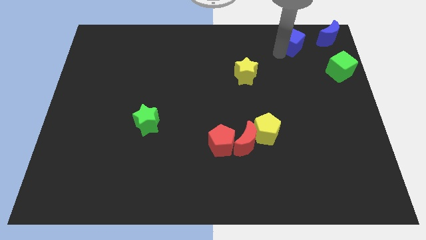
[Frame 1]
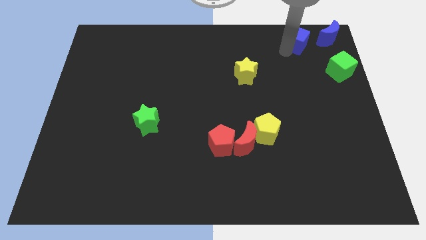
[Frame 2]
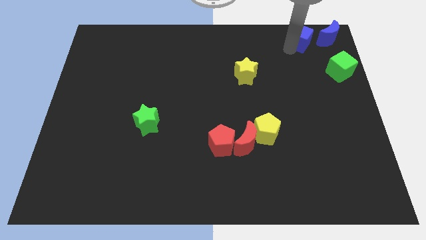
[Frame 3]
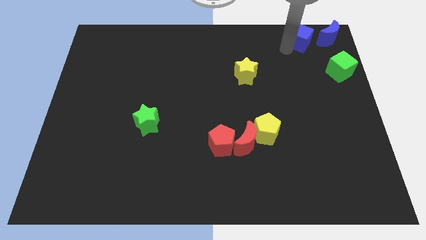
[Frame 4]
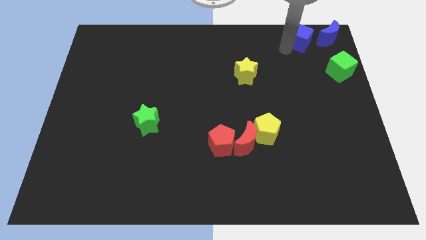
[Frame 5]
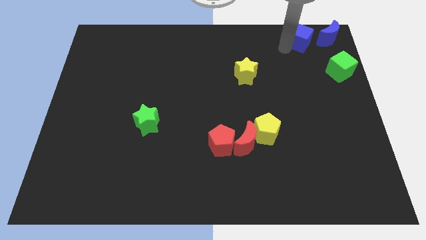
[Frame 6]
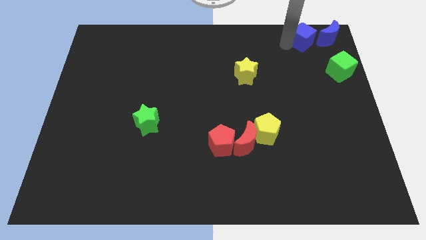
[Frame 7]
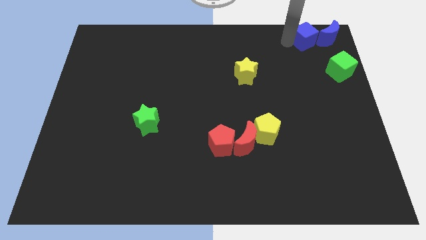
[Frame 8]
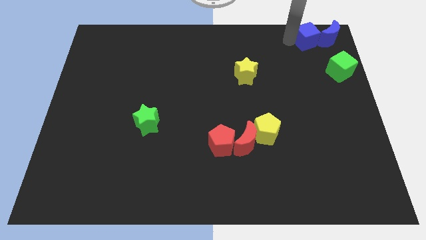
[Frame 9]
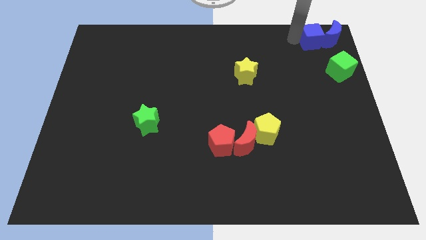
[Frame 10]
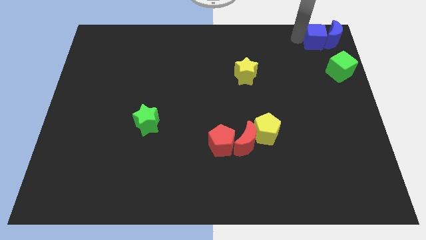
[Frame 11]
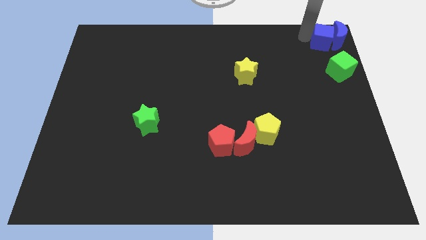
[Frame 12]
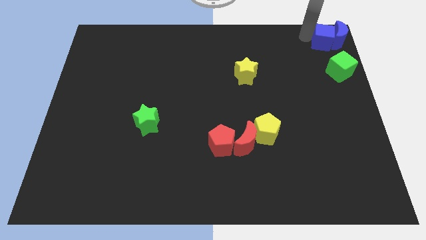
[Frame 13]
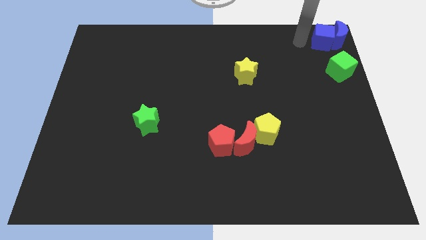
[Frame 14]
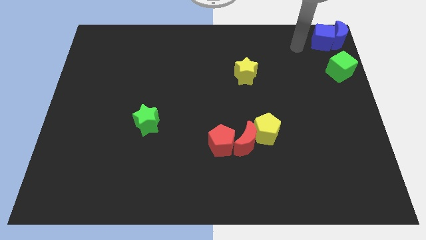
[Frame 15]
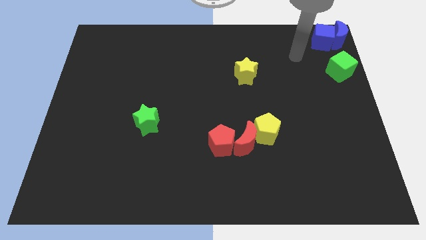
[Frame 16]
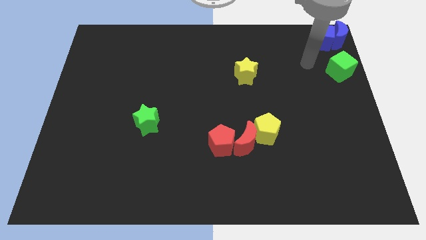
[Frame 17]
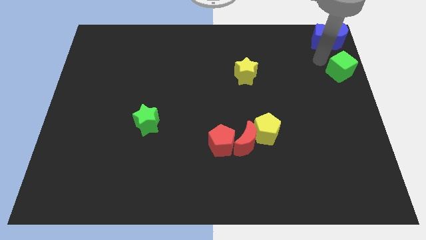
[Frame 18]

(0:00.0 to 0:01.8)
push the blue cube into blue moon

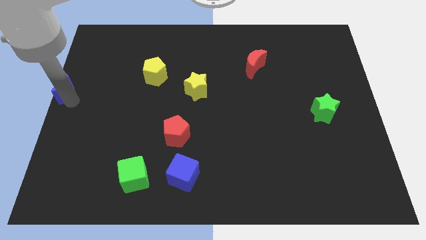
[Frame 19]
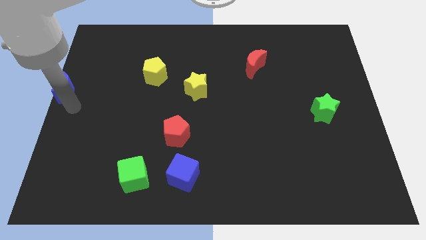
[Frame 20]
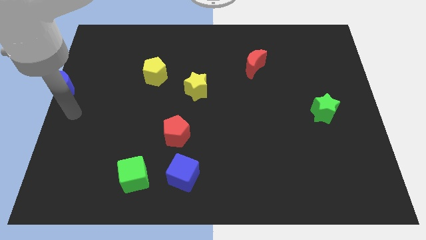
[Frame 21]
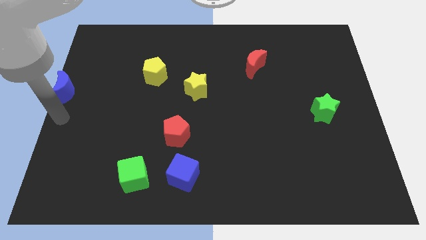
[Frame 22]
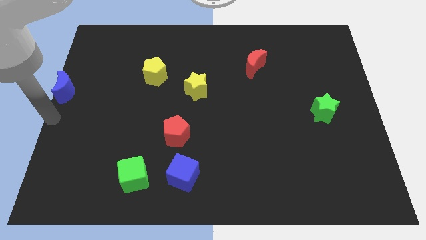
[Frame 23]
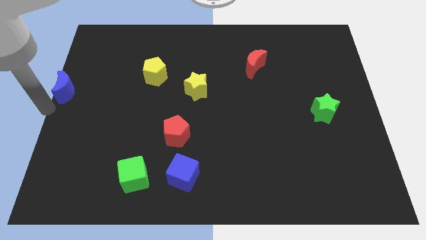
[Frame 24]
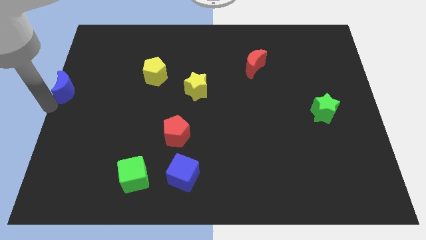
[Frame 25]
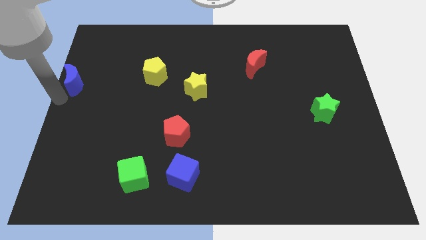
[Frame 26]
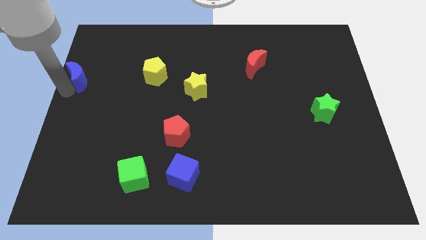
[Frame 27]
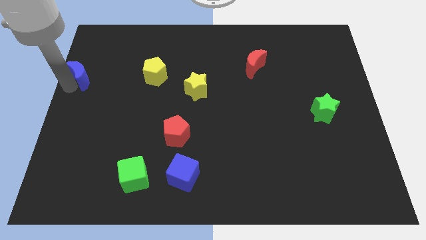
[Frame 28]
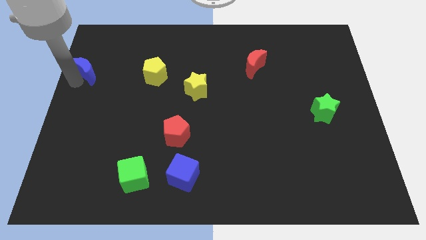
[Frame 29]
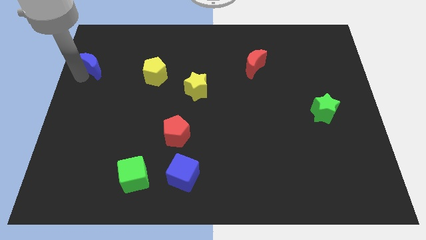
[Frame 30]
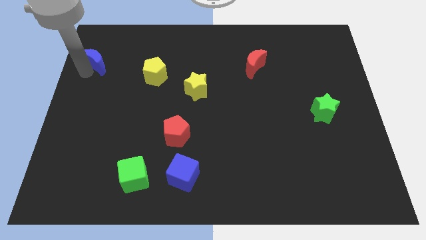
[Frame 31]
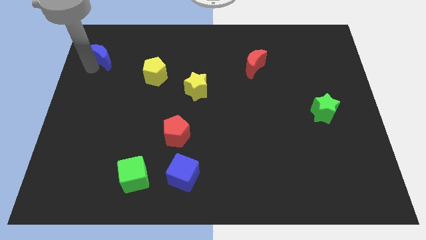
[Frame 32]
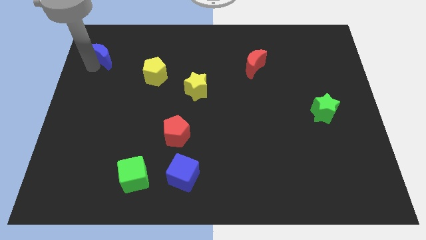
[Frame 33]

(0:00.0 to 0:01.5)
push blue moon upwards

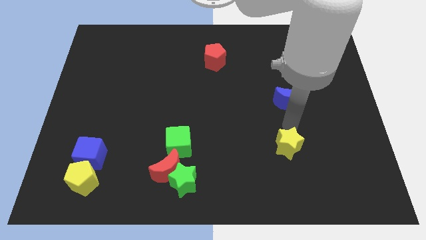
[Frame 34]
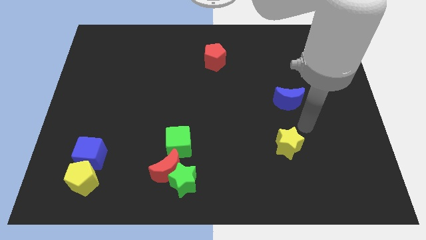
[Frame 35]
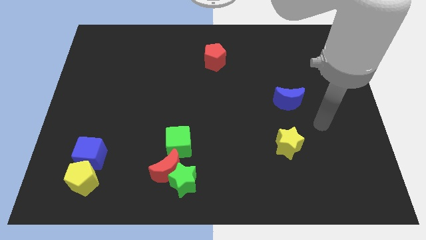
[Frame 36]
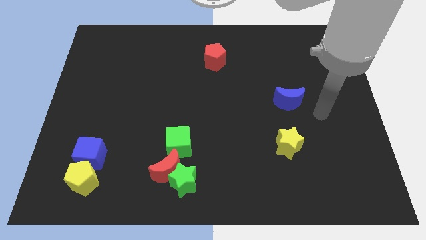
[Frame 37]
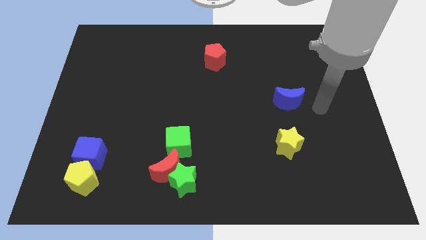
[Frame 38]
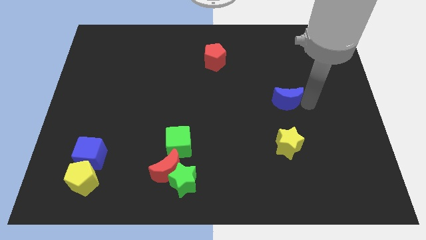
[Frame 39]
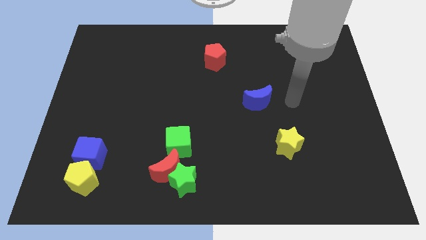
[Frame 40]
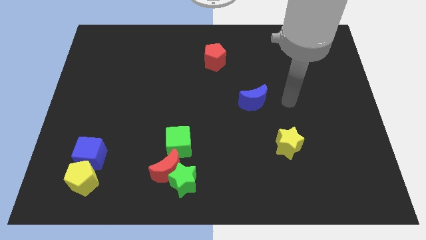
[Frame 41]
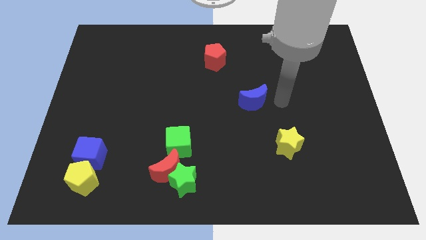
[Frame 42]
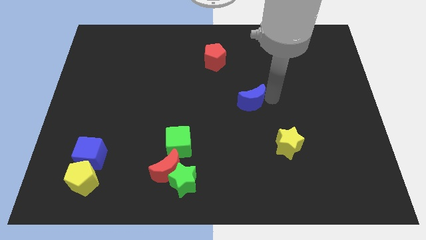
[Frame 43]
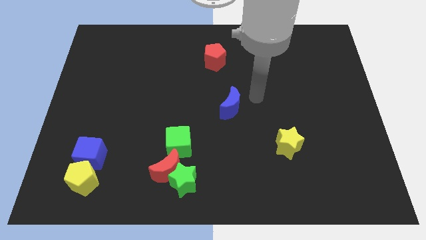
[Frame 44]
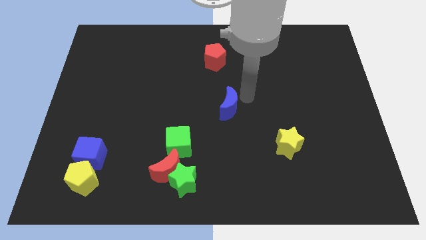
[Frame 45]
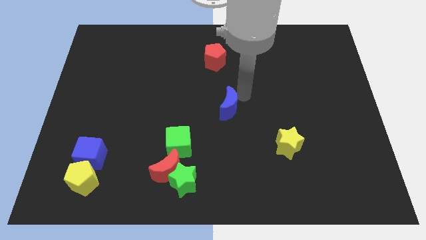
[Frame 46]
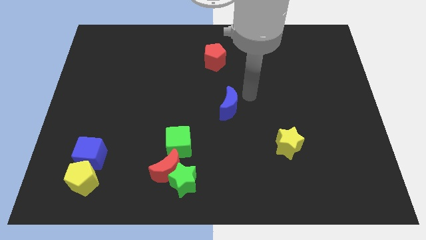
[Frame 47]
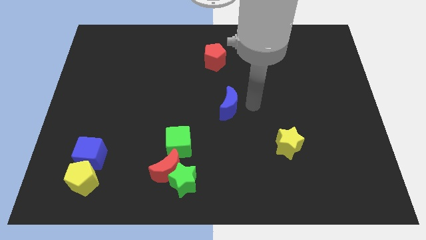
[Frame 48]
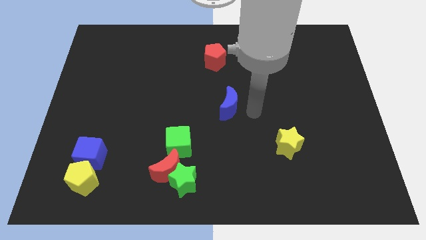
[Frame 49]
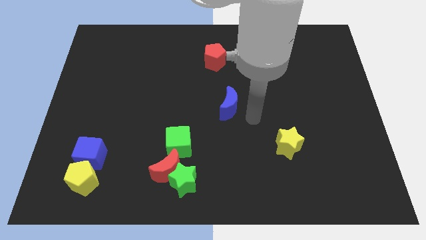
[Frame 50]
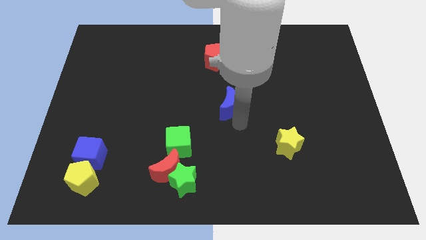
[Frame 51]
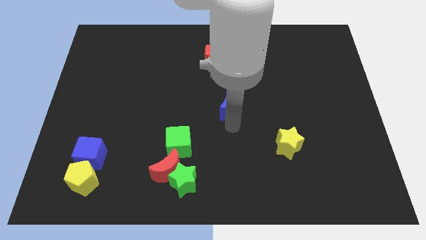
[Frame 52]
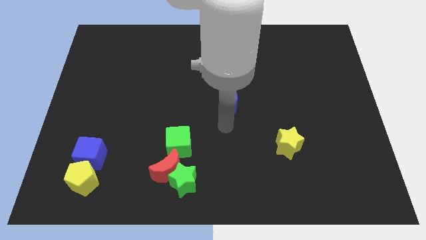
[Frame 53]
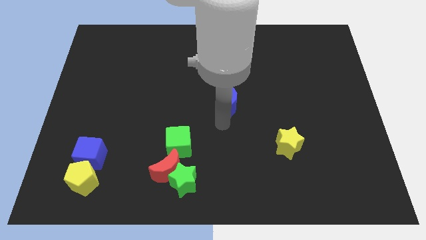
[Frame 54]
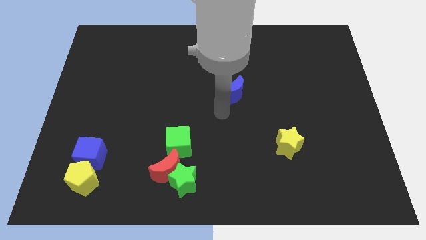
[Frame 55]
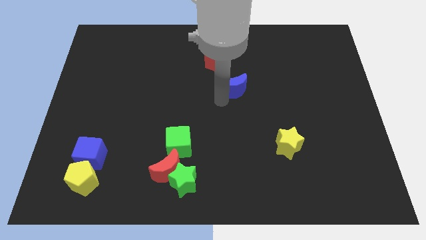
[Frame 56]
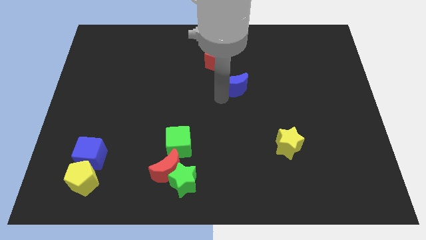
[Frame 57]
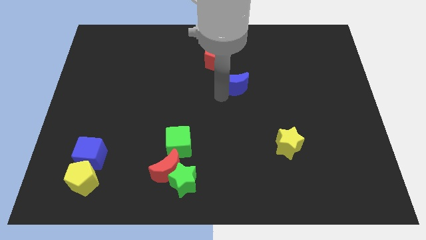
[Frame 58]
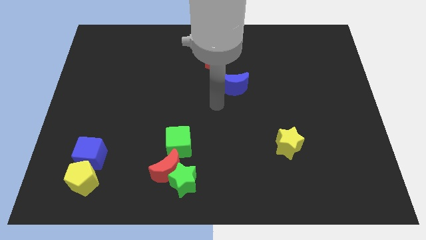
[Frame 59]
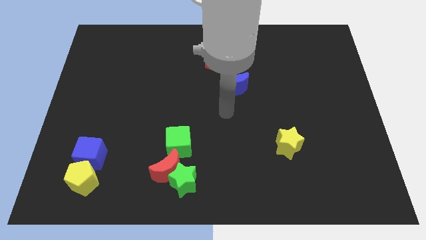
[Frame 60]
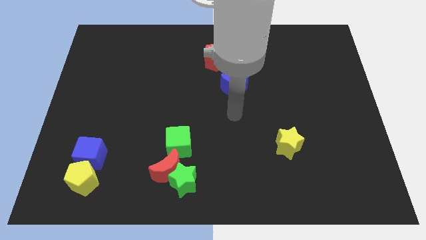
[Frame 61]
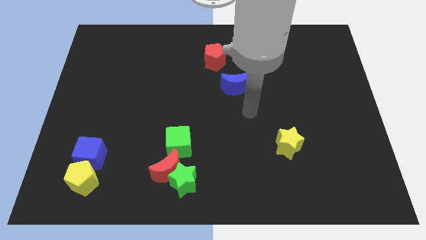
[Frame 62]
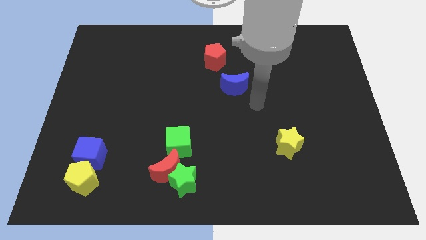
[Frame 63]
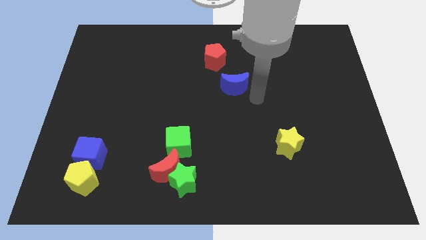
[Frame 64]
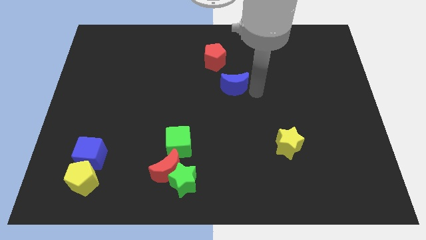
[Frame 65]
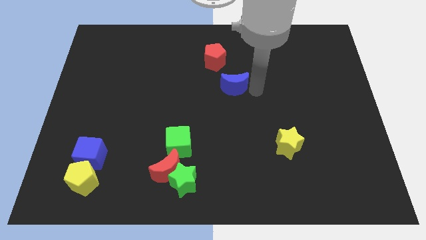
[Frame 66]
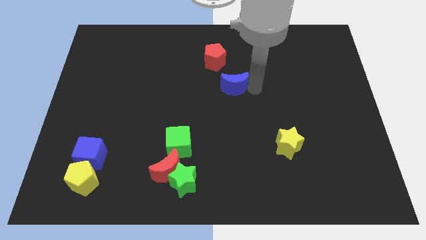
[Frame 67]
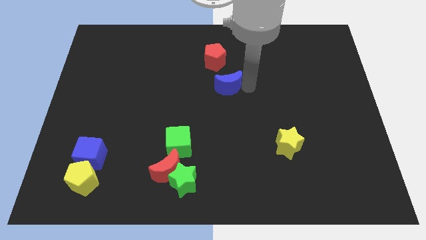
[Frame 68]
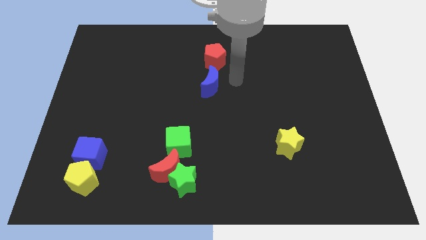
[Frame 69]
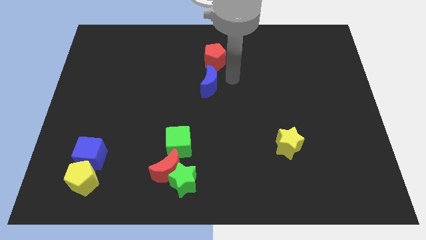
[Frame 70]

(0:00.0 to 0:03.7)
place blue moon below the red pentagon

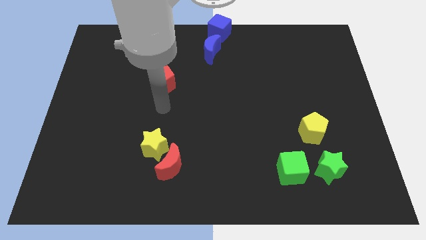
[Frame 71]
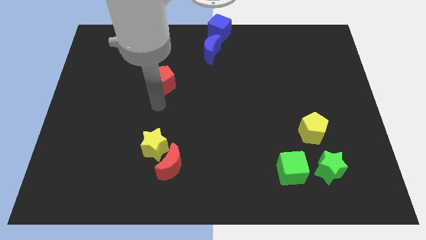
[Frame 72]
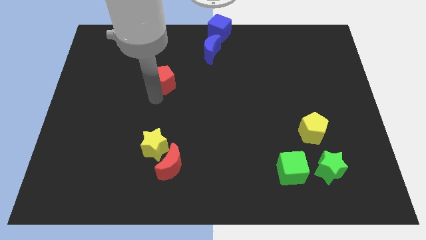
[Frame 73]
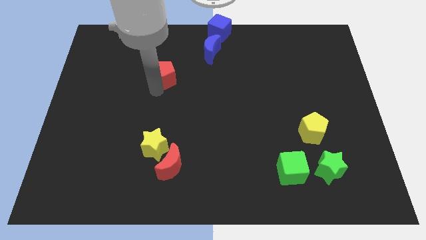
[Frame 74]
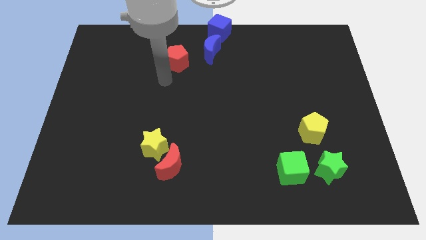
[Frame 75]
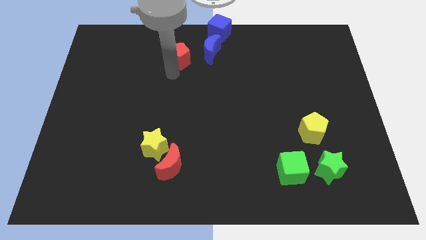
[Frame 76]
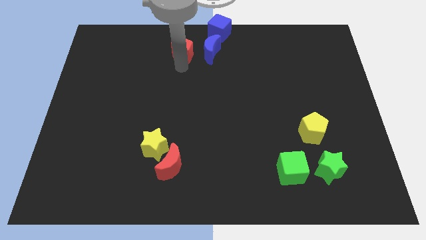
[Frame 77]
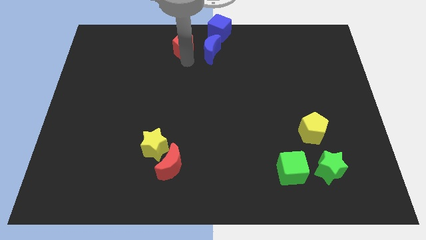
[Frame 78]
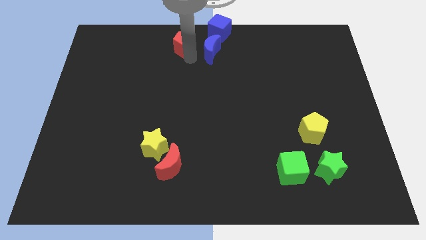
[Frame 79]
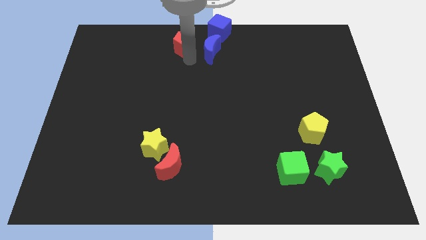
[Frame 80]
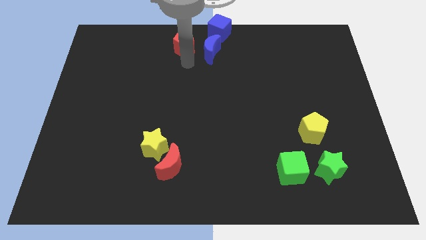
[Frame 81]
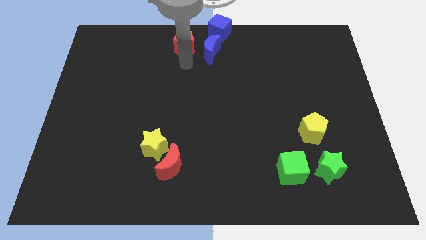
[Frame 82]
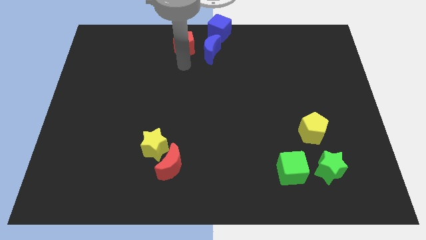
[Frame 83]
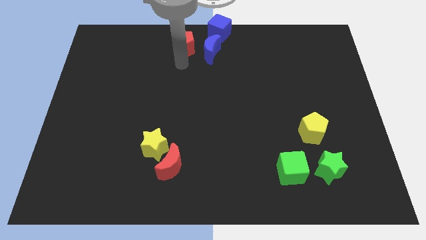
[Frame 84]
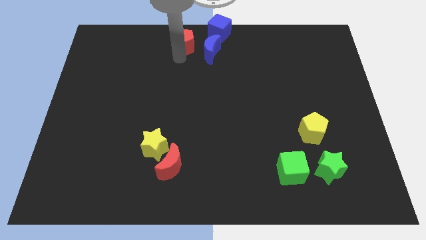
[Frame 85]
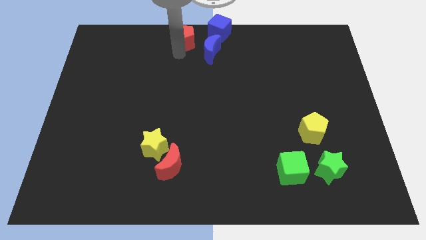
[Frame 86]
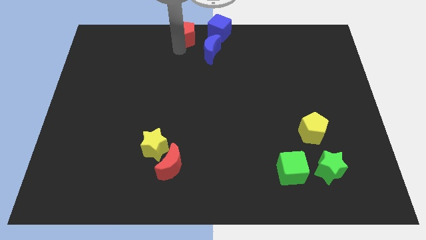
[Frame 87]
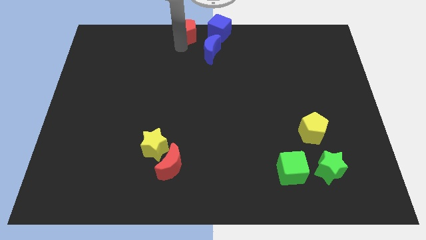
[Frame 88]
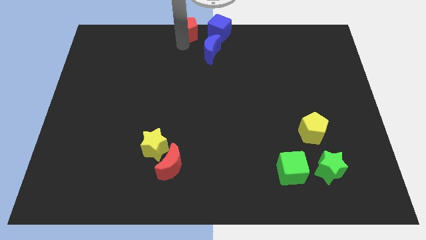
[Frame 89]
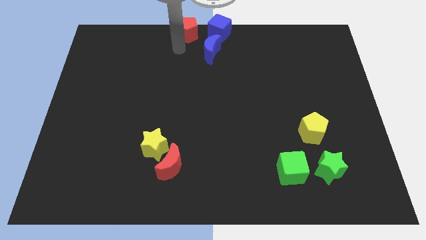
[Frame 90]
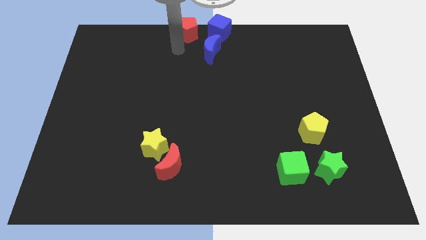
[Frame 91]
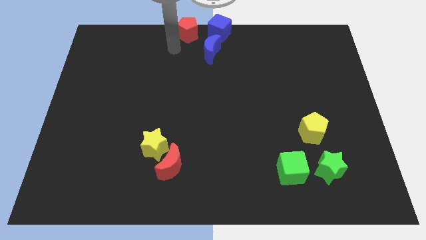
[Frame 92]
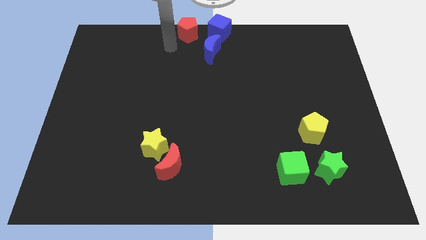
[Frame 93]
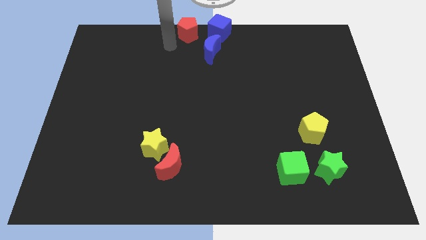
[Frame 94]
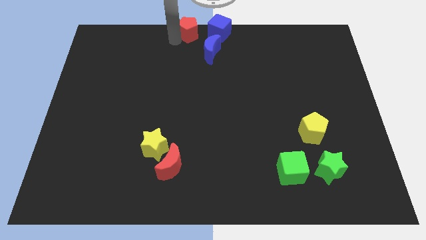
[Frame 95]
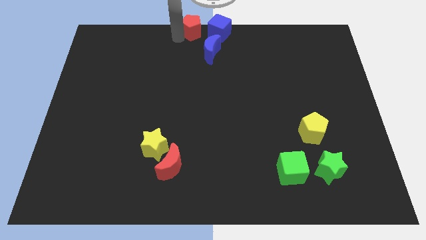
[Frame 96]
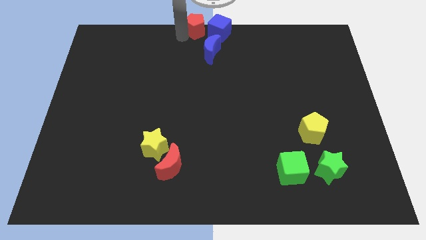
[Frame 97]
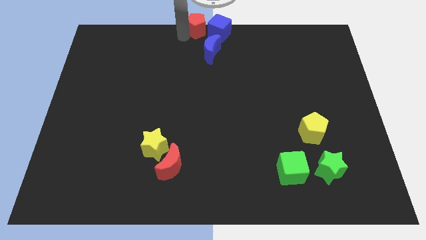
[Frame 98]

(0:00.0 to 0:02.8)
push red pentagon at center top
